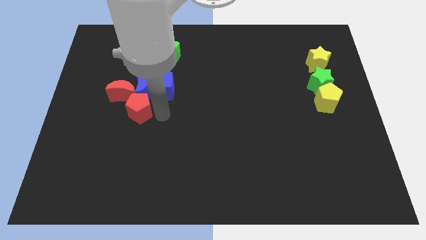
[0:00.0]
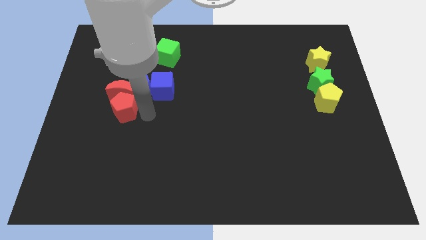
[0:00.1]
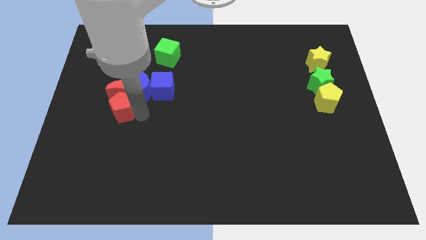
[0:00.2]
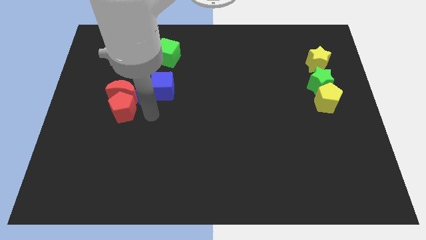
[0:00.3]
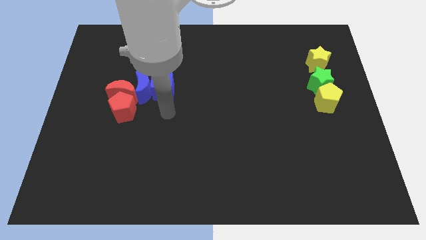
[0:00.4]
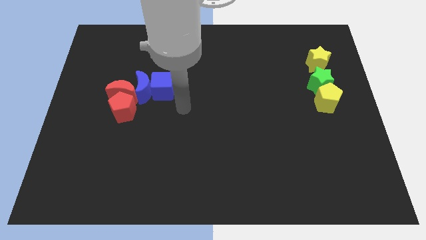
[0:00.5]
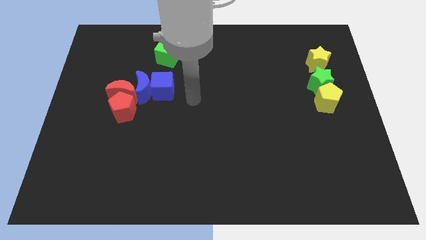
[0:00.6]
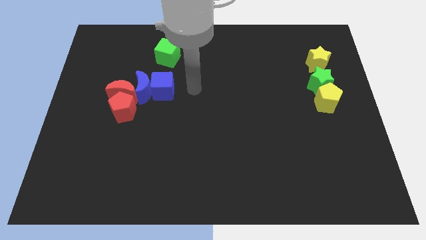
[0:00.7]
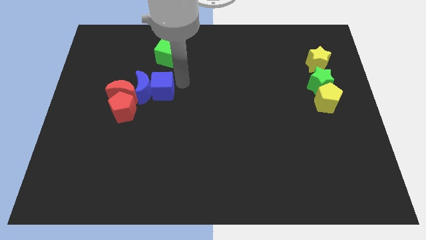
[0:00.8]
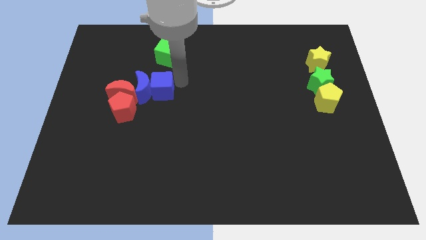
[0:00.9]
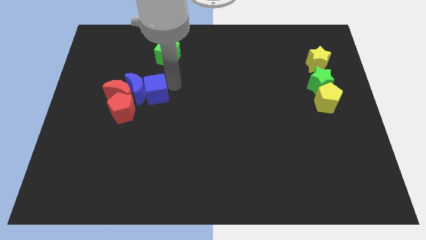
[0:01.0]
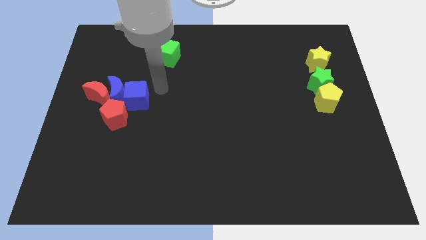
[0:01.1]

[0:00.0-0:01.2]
push the blue cube towards the left center

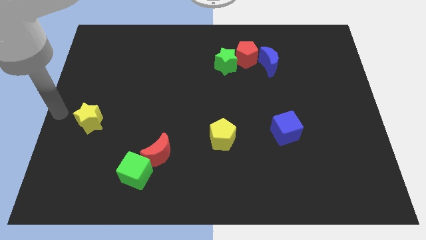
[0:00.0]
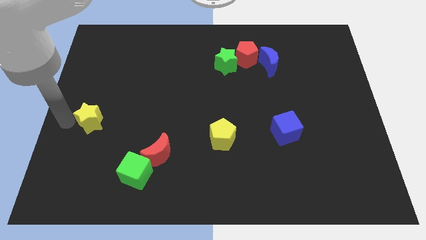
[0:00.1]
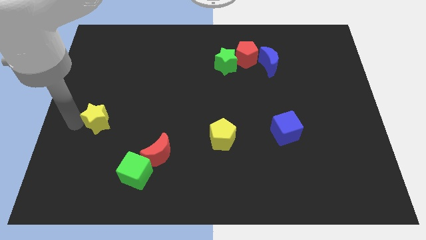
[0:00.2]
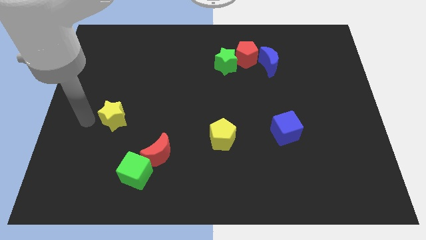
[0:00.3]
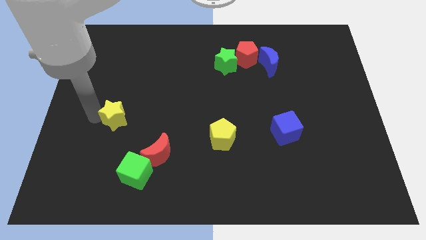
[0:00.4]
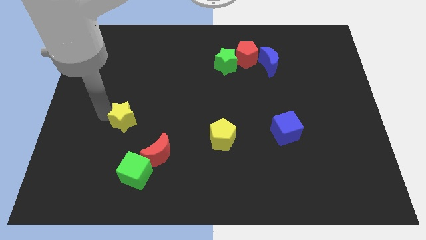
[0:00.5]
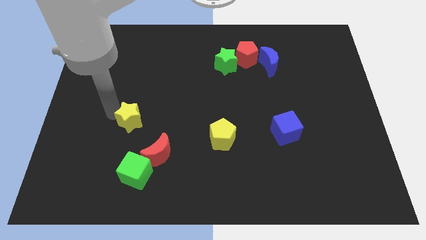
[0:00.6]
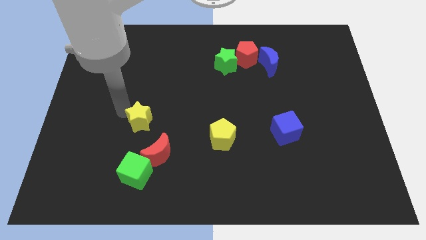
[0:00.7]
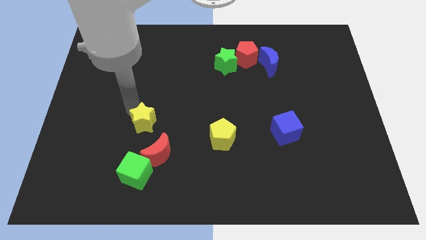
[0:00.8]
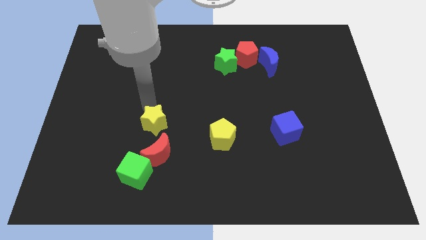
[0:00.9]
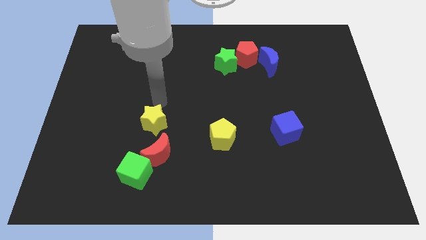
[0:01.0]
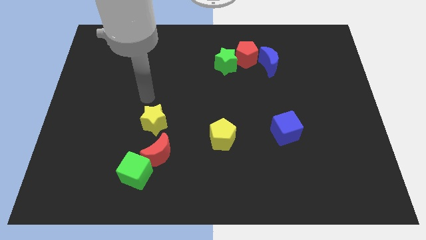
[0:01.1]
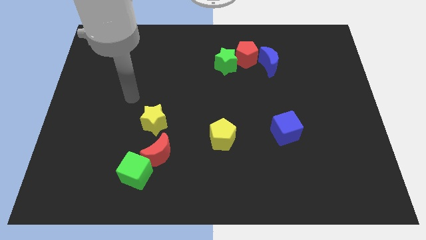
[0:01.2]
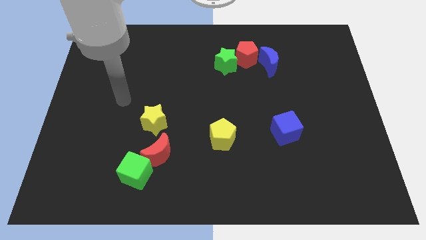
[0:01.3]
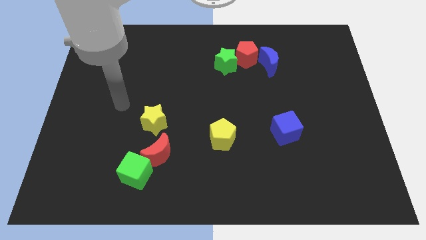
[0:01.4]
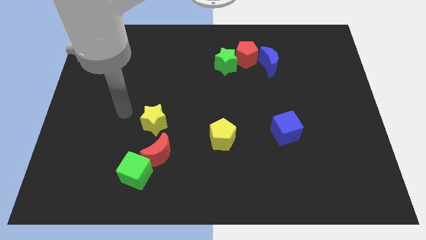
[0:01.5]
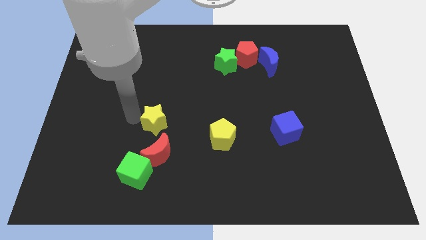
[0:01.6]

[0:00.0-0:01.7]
move the yellow star towards the red crescent

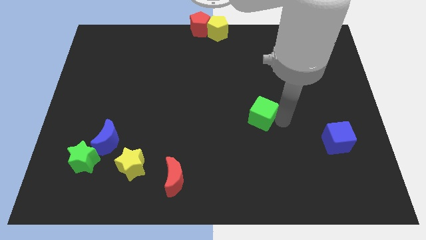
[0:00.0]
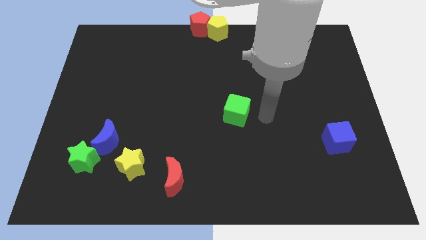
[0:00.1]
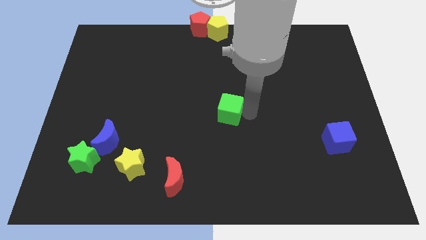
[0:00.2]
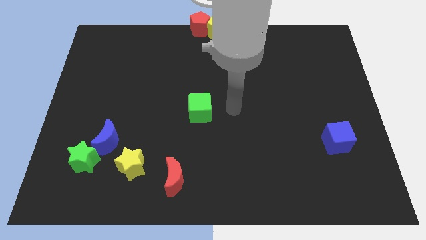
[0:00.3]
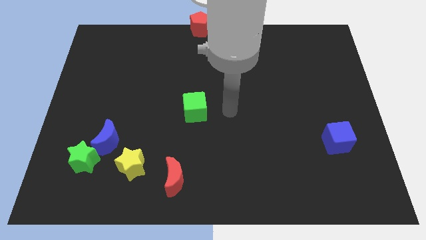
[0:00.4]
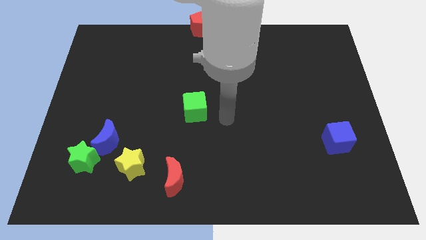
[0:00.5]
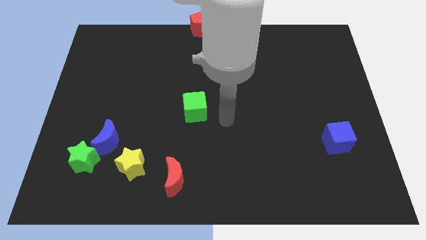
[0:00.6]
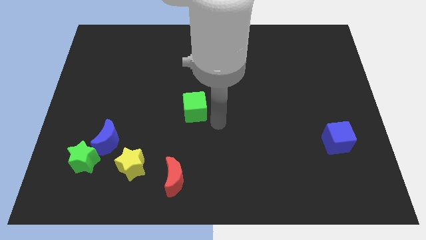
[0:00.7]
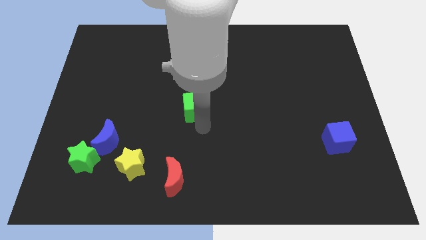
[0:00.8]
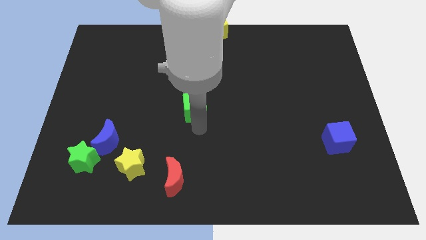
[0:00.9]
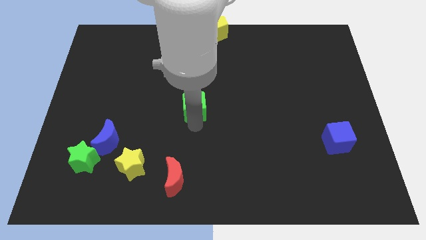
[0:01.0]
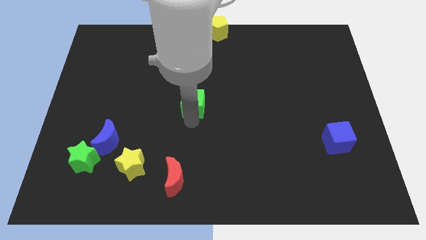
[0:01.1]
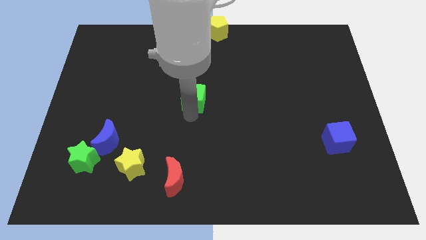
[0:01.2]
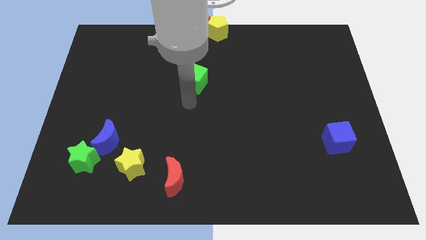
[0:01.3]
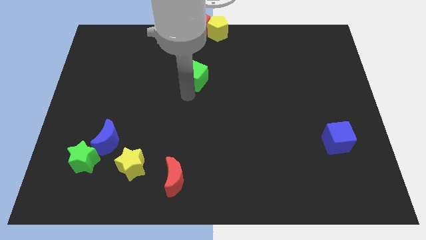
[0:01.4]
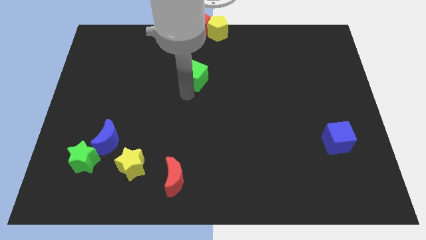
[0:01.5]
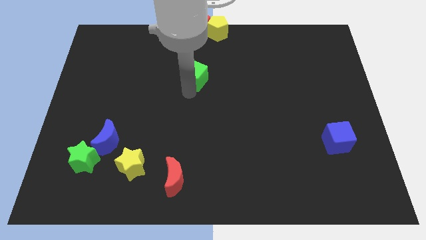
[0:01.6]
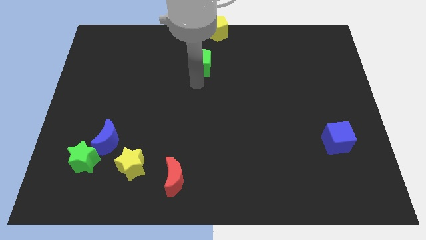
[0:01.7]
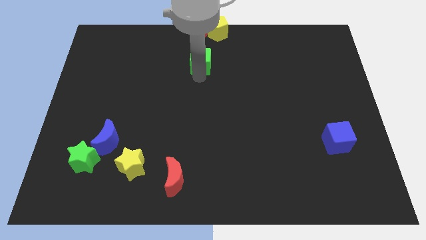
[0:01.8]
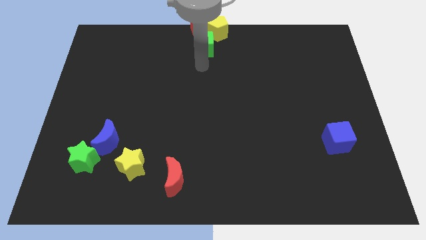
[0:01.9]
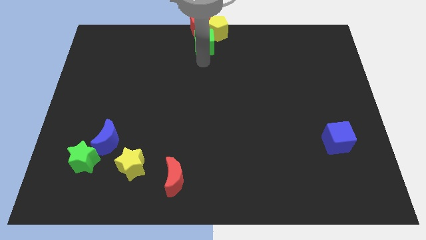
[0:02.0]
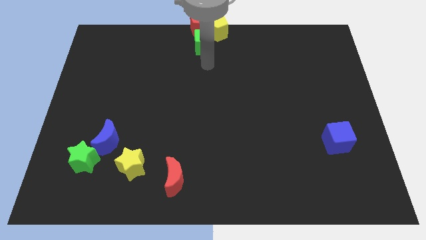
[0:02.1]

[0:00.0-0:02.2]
move the green cube to the bottom left side of the yellow pentagon

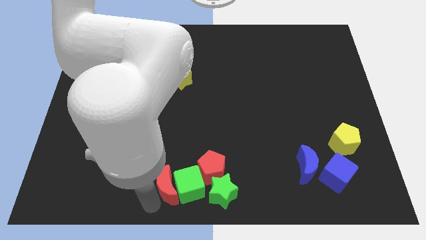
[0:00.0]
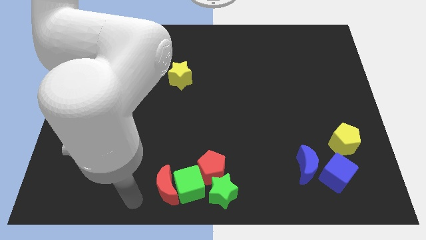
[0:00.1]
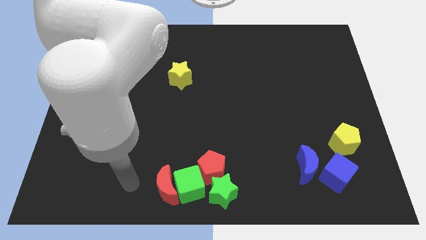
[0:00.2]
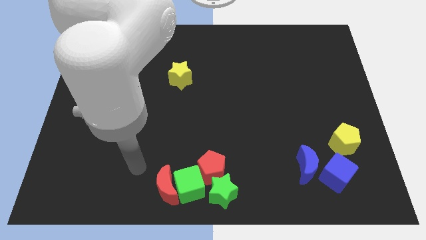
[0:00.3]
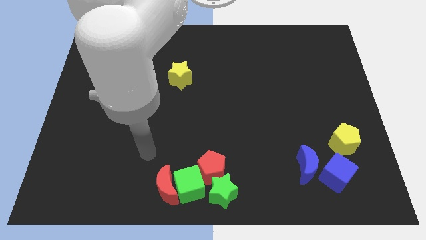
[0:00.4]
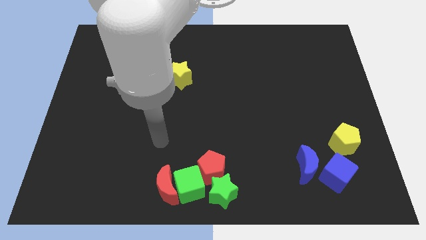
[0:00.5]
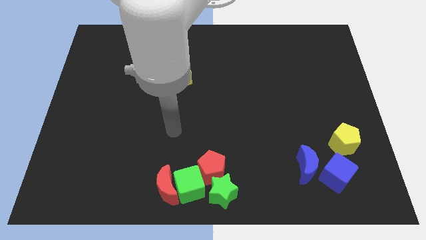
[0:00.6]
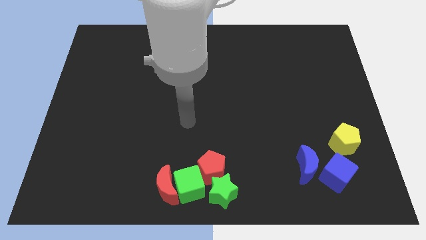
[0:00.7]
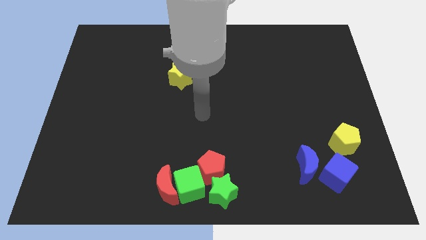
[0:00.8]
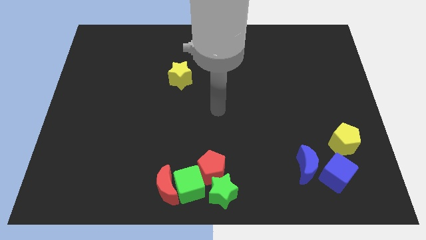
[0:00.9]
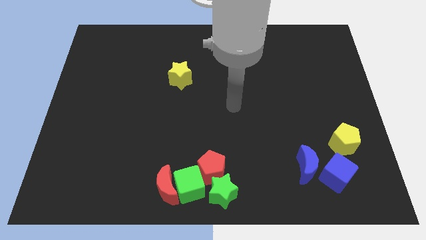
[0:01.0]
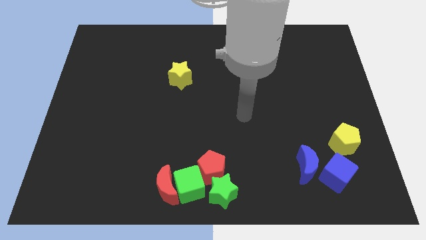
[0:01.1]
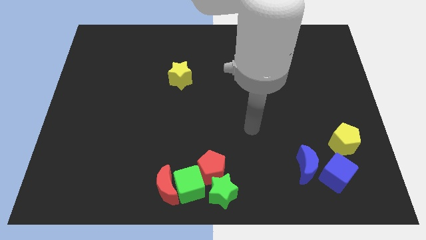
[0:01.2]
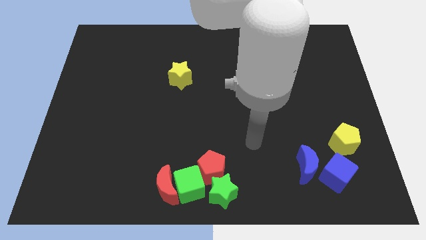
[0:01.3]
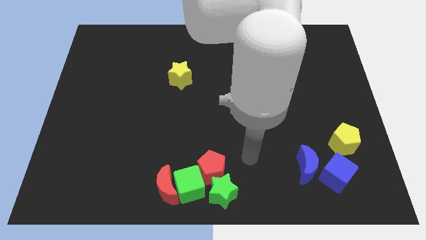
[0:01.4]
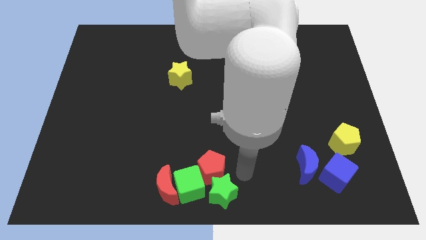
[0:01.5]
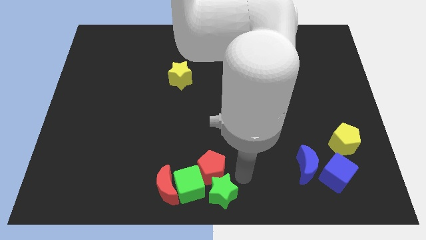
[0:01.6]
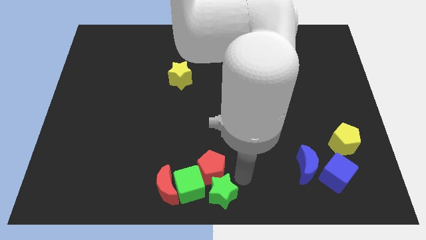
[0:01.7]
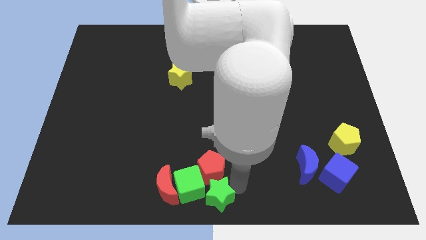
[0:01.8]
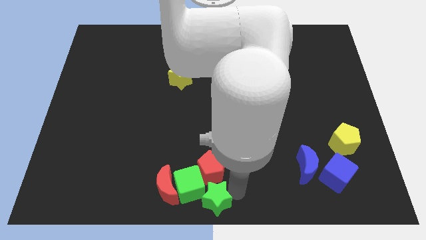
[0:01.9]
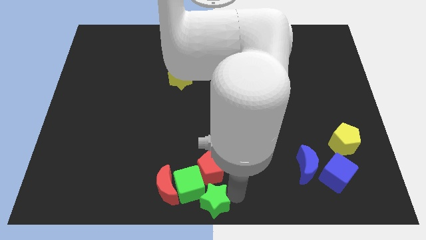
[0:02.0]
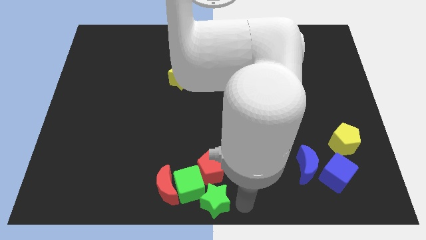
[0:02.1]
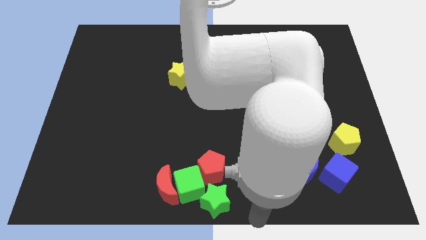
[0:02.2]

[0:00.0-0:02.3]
adjust the green star to the bottom center of the board

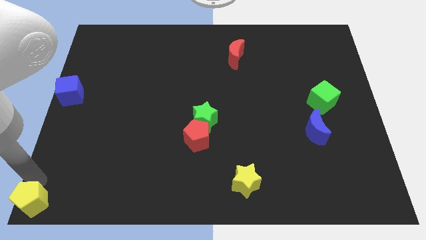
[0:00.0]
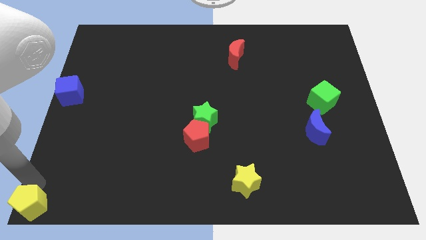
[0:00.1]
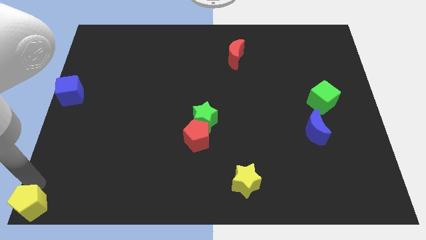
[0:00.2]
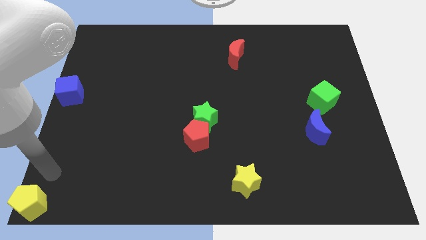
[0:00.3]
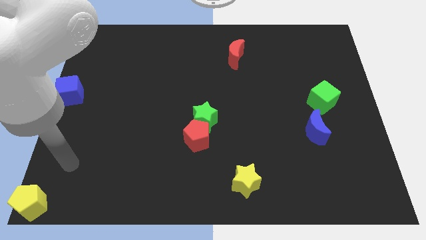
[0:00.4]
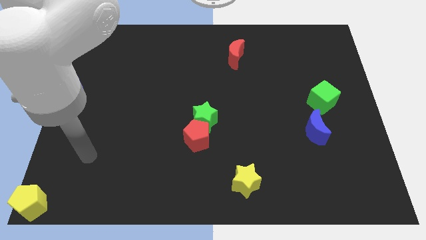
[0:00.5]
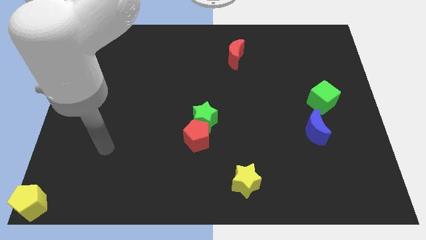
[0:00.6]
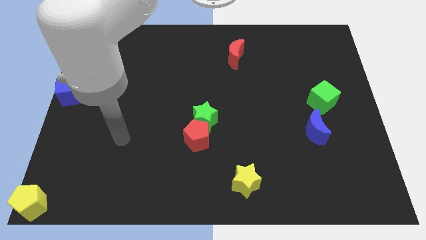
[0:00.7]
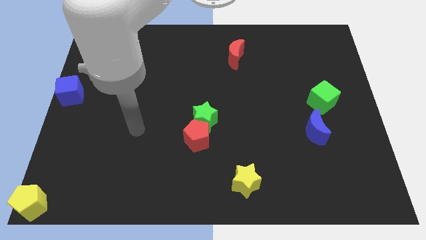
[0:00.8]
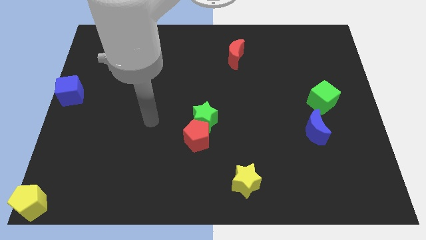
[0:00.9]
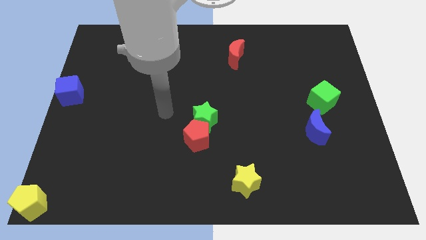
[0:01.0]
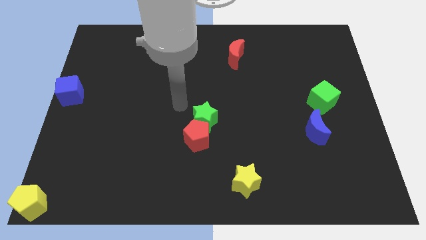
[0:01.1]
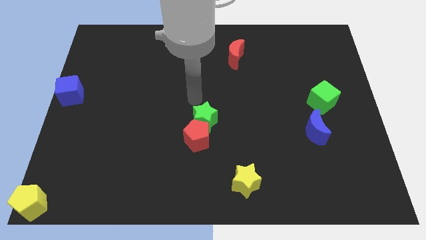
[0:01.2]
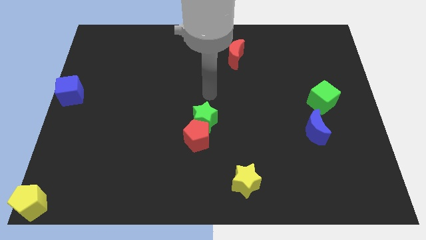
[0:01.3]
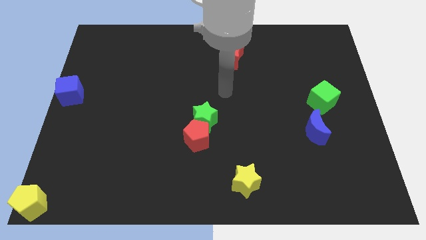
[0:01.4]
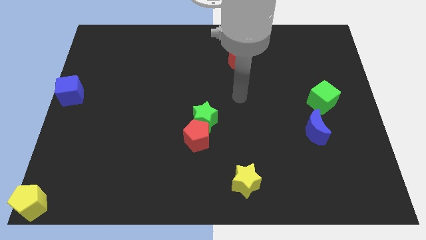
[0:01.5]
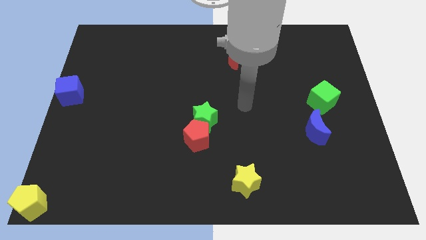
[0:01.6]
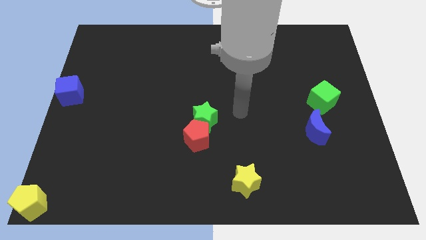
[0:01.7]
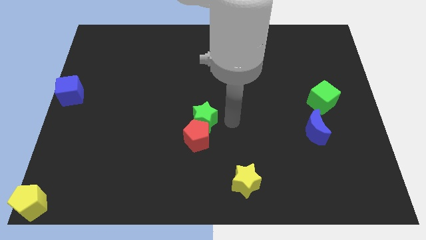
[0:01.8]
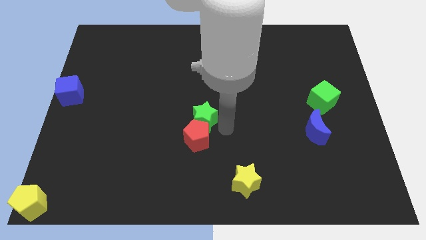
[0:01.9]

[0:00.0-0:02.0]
move the arm near the green star
